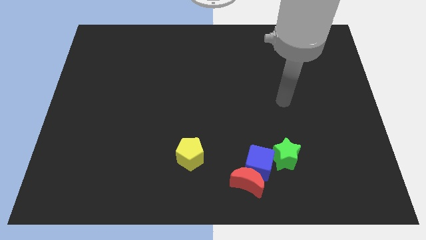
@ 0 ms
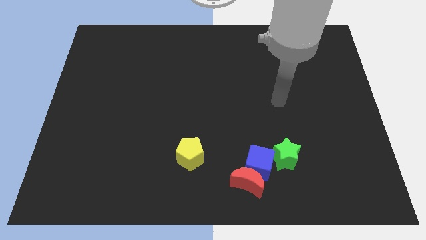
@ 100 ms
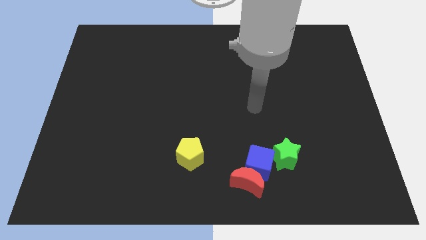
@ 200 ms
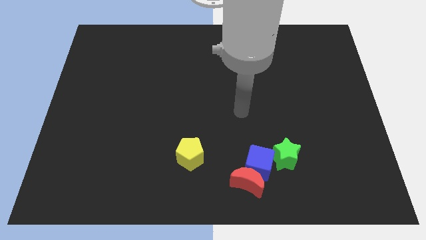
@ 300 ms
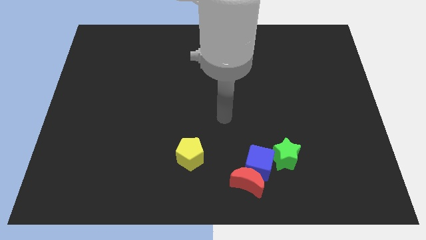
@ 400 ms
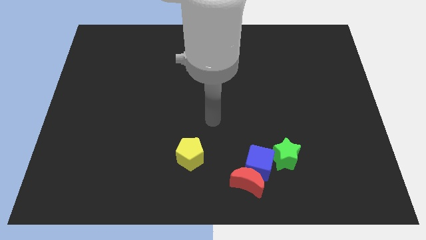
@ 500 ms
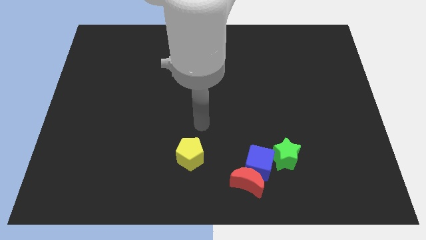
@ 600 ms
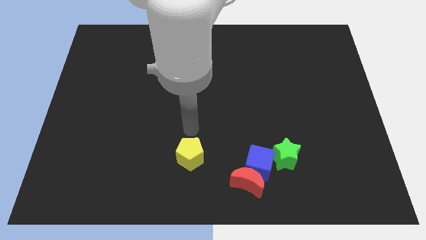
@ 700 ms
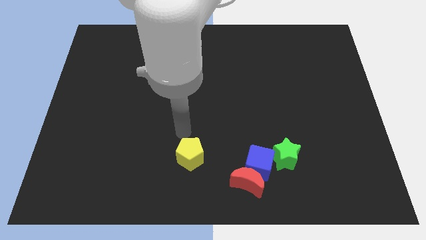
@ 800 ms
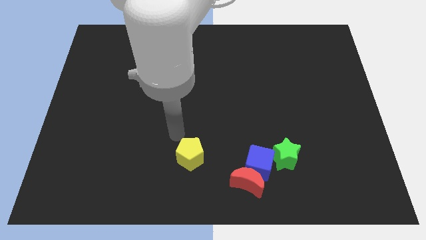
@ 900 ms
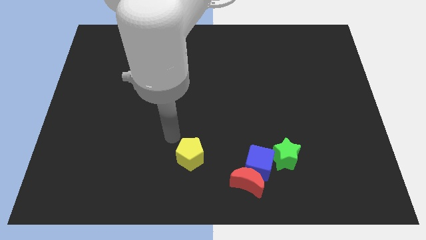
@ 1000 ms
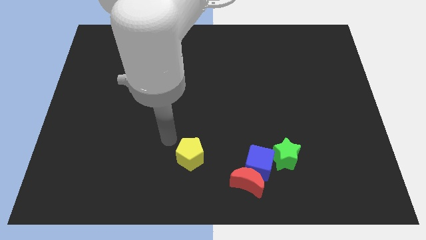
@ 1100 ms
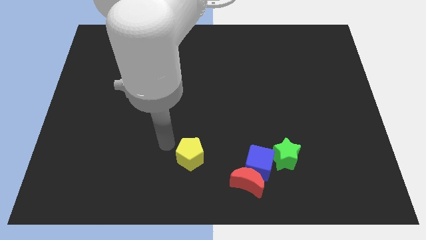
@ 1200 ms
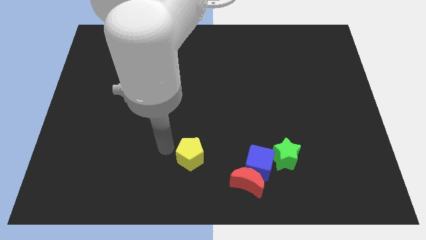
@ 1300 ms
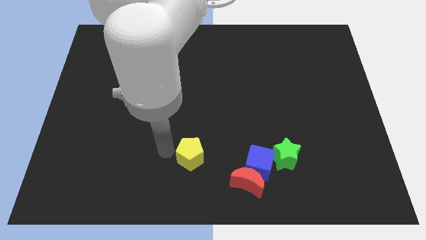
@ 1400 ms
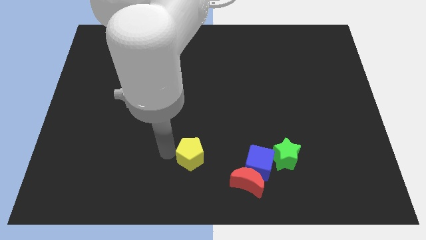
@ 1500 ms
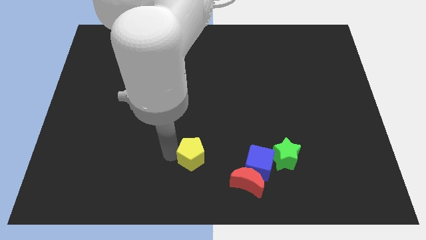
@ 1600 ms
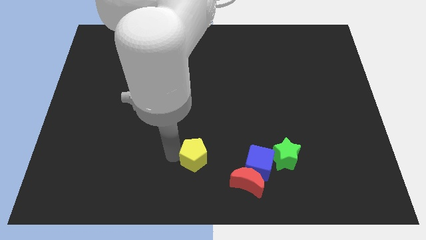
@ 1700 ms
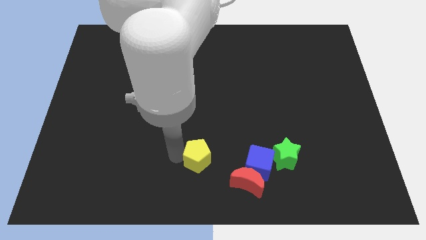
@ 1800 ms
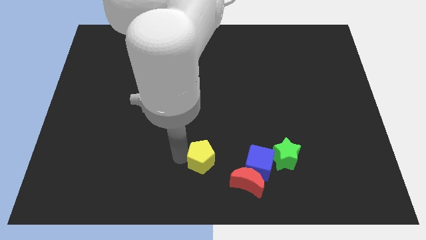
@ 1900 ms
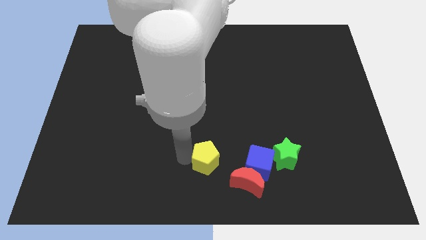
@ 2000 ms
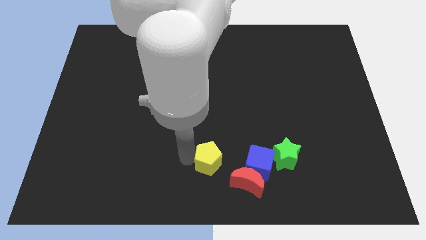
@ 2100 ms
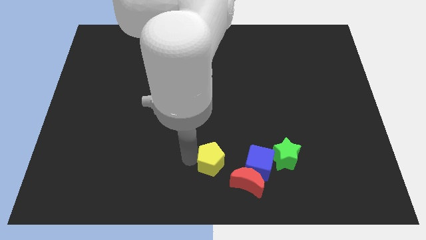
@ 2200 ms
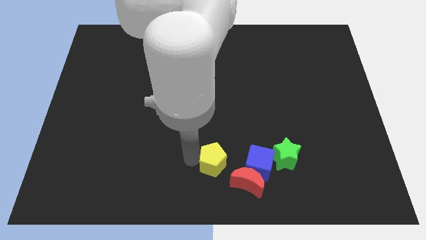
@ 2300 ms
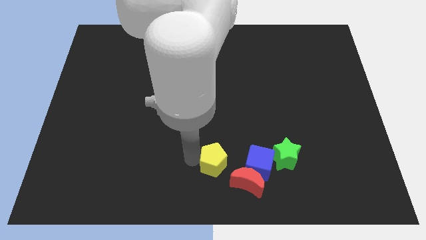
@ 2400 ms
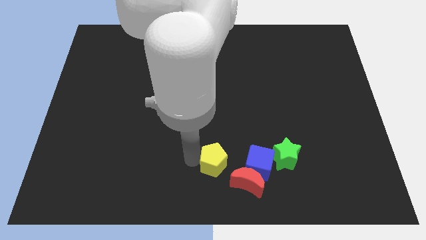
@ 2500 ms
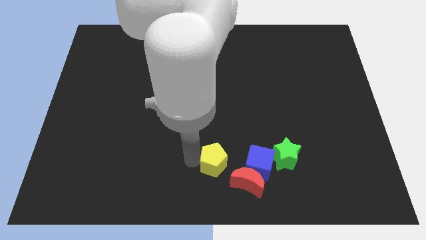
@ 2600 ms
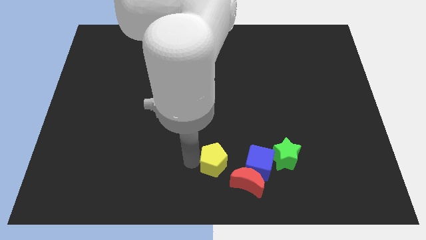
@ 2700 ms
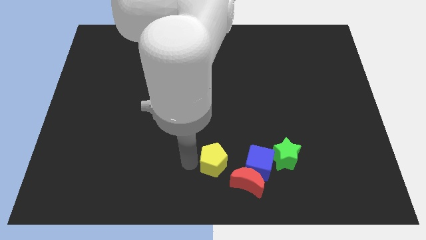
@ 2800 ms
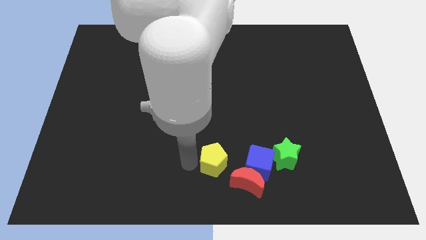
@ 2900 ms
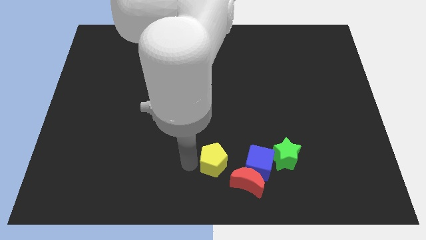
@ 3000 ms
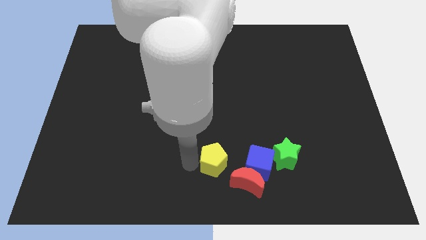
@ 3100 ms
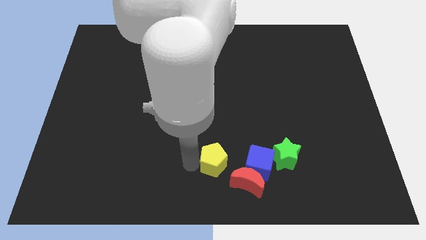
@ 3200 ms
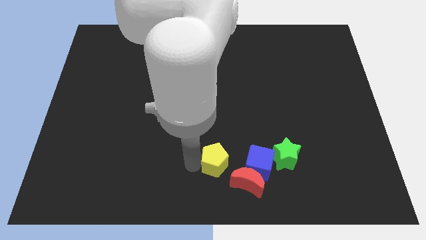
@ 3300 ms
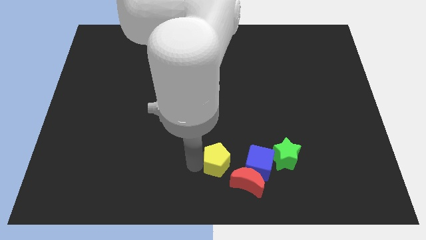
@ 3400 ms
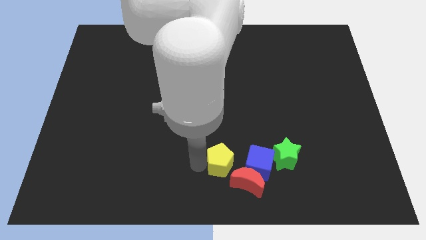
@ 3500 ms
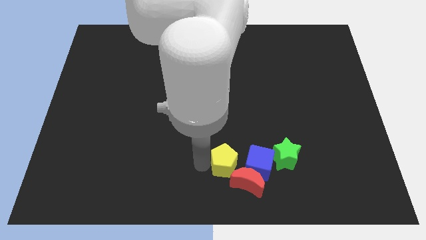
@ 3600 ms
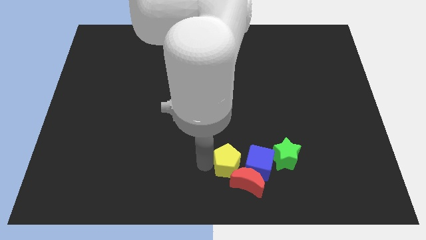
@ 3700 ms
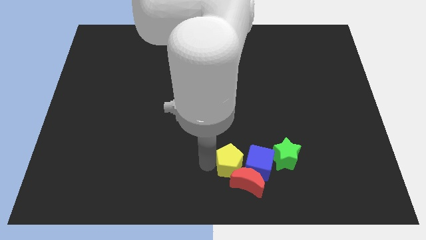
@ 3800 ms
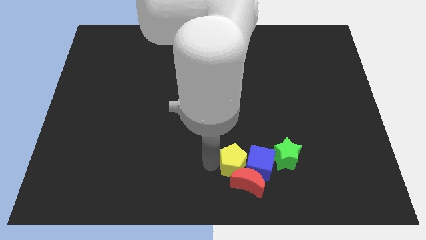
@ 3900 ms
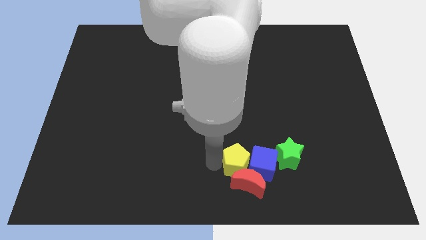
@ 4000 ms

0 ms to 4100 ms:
move the pentagon close to the blue cube

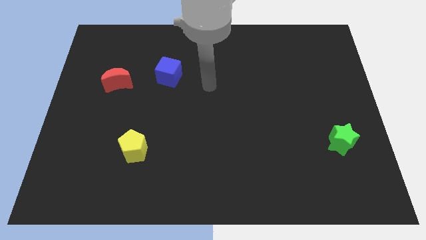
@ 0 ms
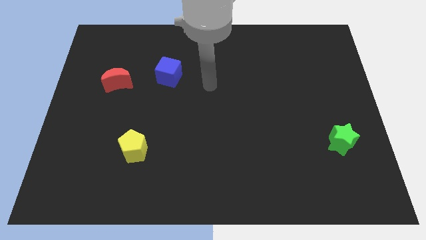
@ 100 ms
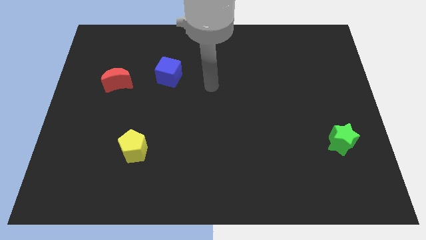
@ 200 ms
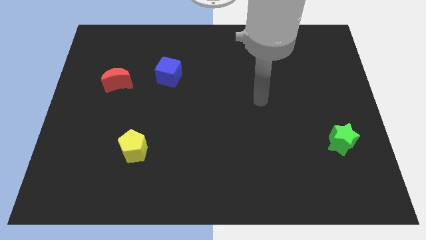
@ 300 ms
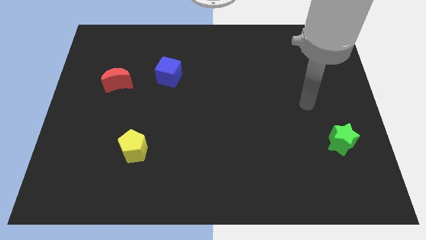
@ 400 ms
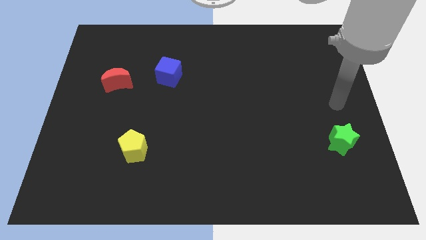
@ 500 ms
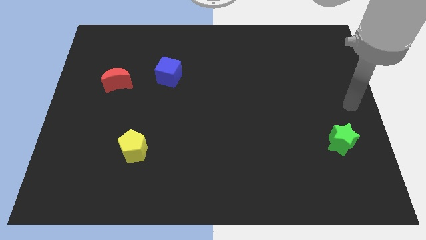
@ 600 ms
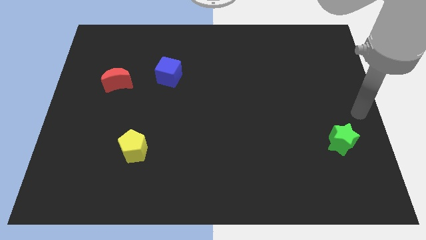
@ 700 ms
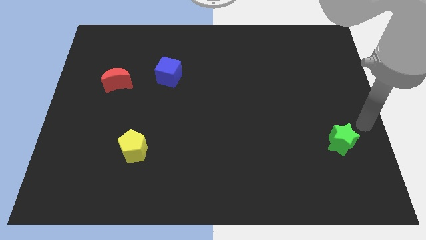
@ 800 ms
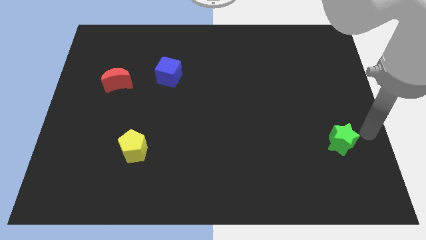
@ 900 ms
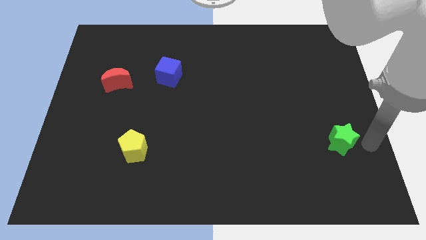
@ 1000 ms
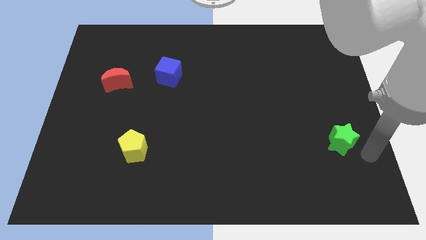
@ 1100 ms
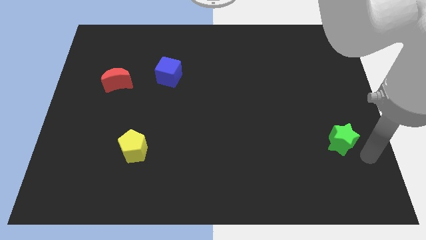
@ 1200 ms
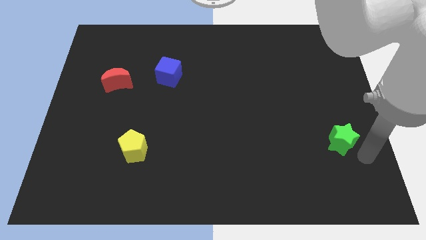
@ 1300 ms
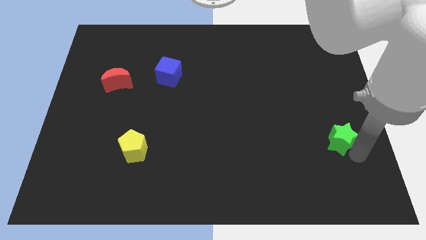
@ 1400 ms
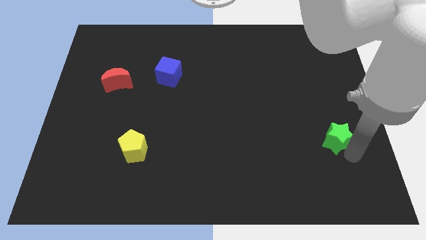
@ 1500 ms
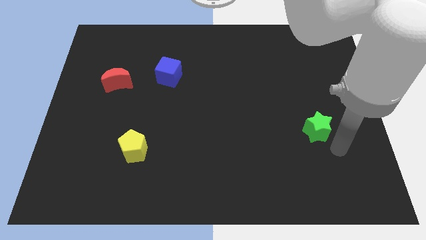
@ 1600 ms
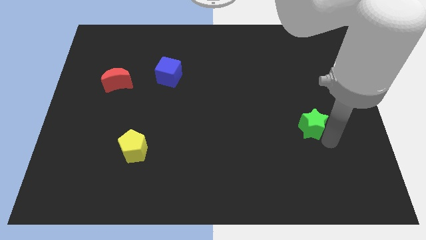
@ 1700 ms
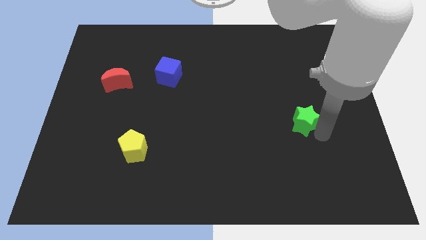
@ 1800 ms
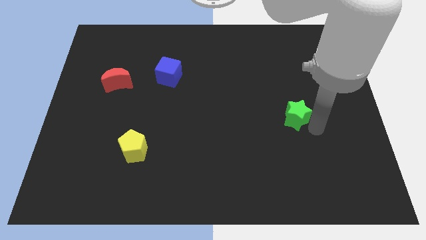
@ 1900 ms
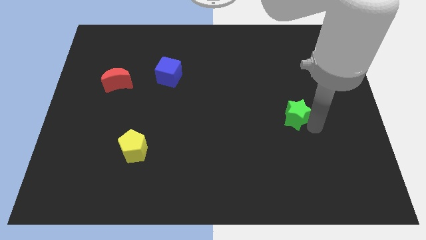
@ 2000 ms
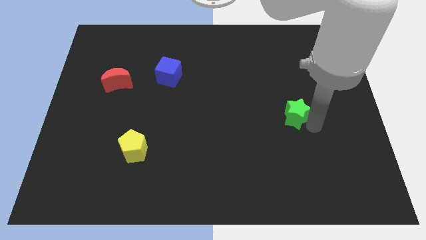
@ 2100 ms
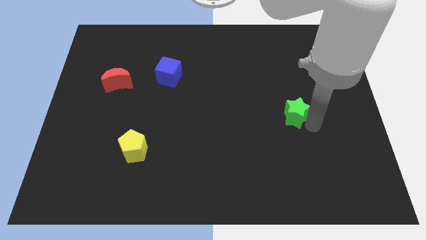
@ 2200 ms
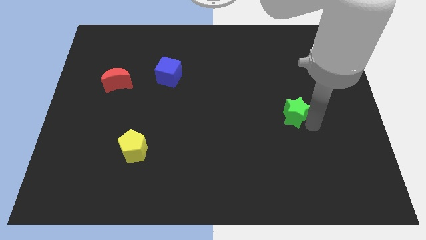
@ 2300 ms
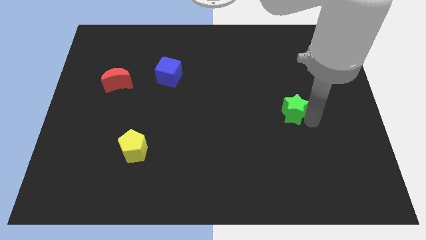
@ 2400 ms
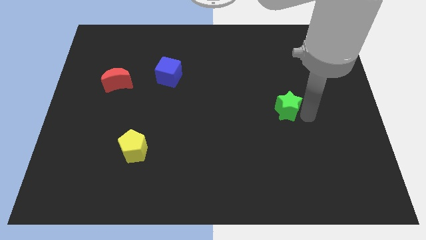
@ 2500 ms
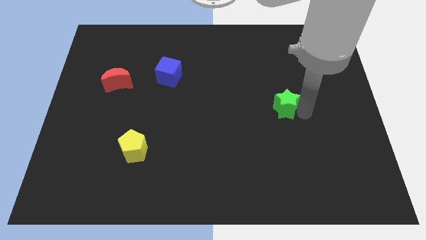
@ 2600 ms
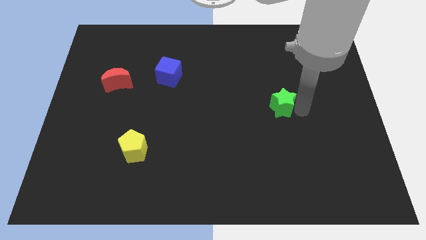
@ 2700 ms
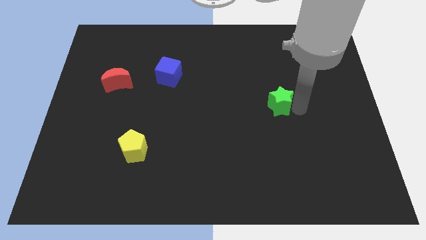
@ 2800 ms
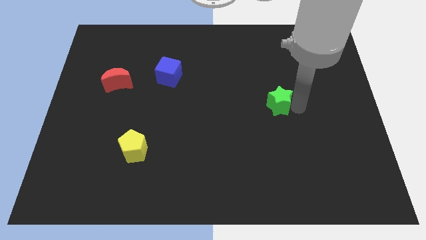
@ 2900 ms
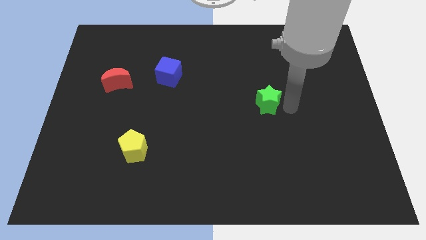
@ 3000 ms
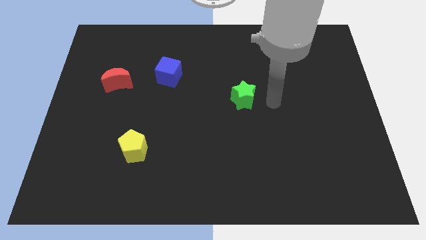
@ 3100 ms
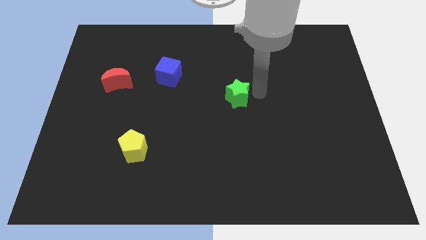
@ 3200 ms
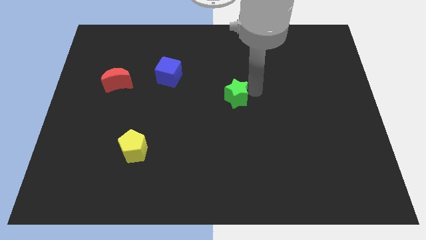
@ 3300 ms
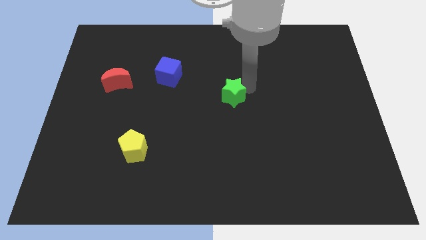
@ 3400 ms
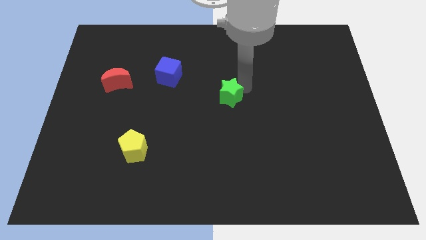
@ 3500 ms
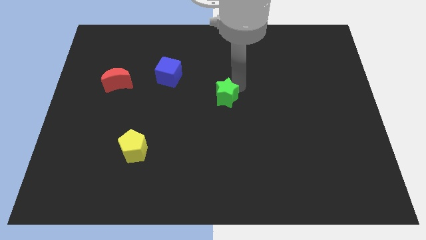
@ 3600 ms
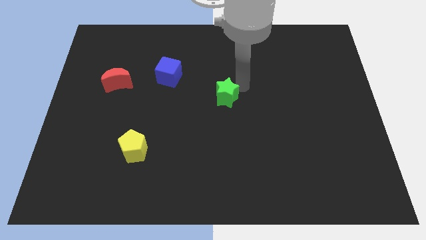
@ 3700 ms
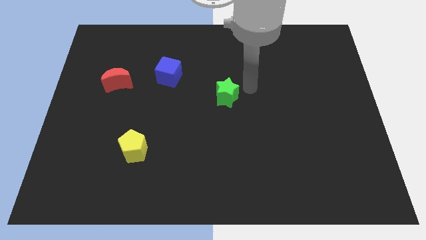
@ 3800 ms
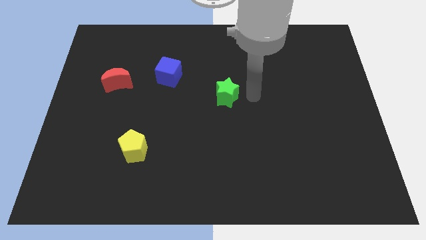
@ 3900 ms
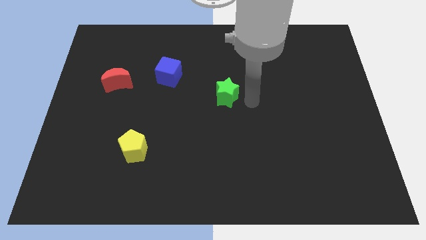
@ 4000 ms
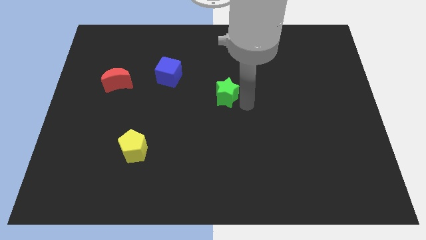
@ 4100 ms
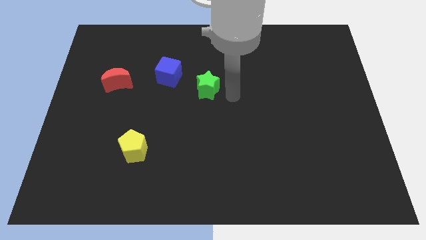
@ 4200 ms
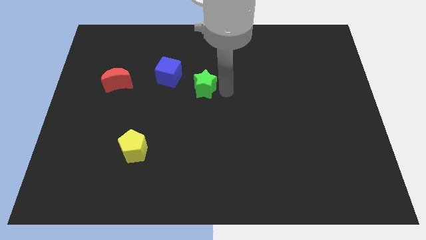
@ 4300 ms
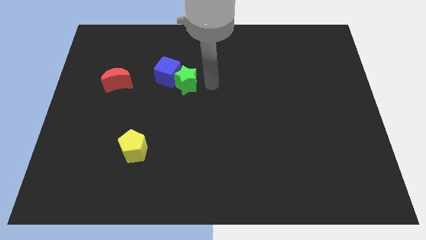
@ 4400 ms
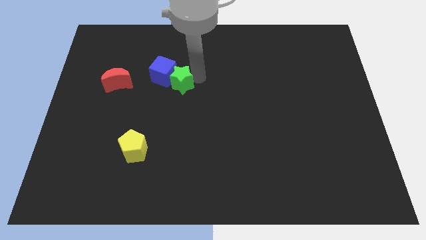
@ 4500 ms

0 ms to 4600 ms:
move the green block close to the cube

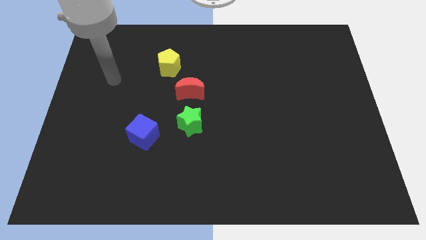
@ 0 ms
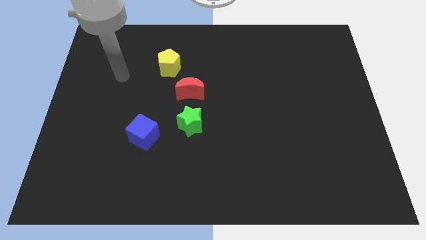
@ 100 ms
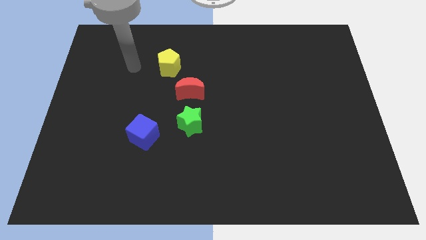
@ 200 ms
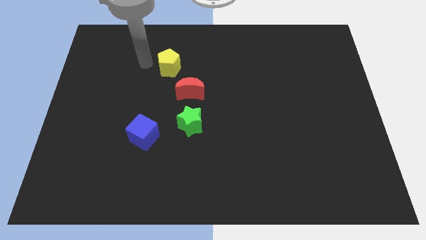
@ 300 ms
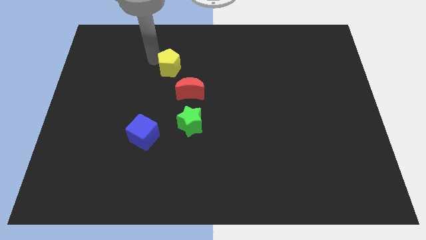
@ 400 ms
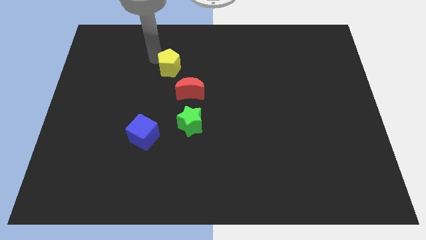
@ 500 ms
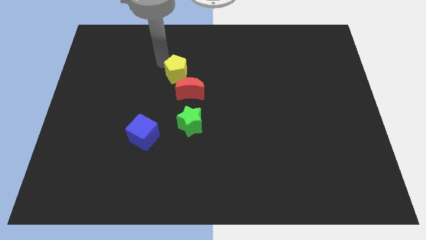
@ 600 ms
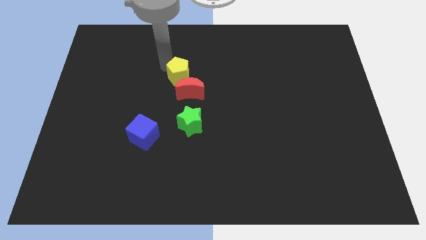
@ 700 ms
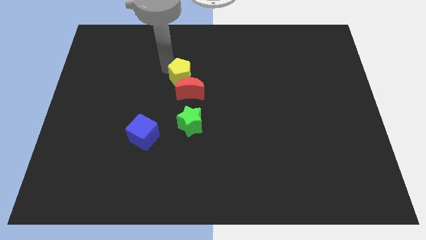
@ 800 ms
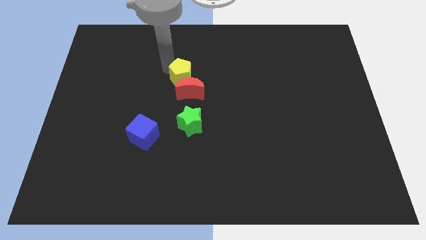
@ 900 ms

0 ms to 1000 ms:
push the yellow block to the moon
